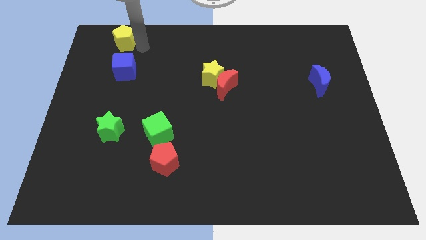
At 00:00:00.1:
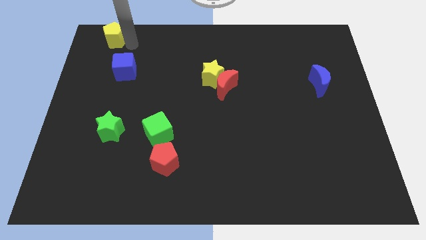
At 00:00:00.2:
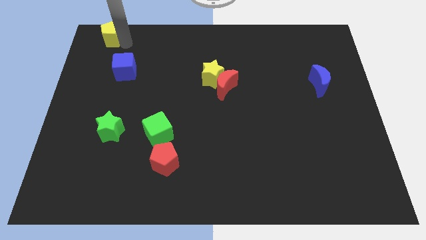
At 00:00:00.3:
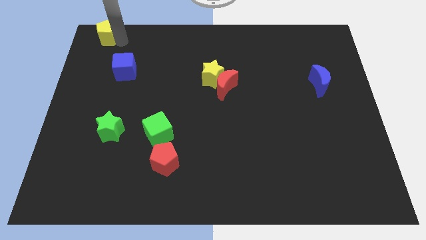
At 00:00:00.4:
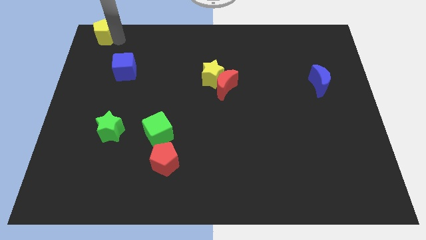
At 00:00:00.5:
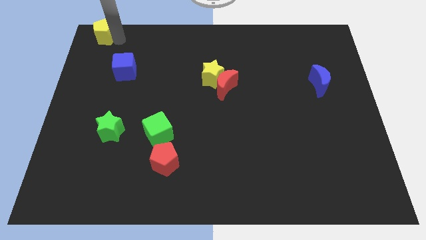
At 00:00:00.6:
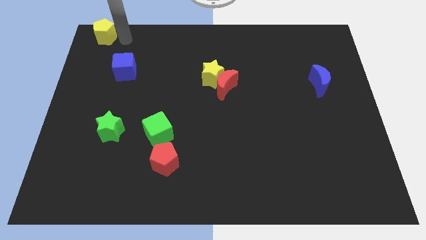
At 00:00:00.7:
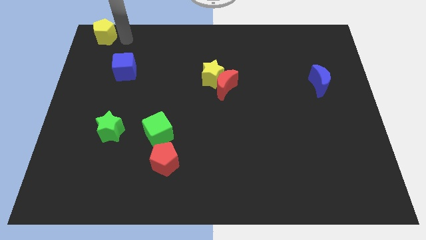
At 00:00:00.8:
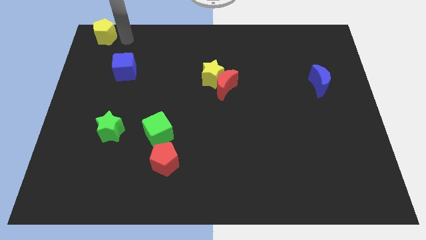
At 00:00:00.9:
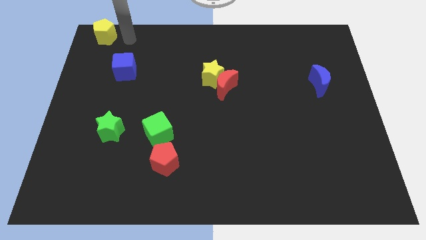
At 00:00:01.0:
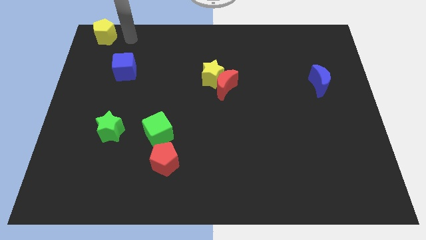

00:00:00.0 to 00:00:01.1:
move the yellow pentagon top left corner of the board

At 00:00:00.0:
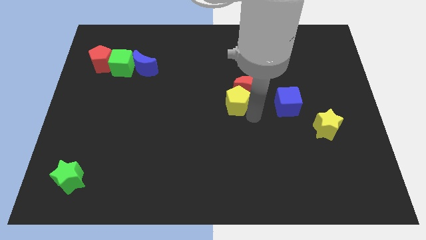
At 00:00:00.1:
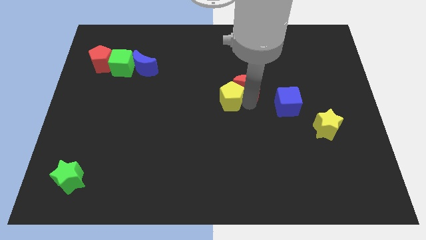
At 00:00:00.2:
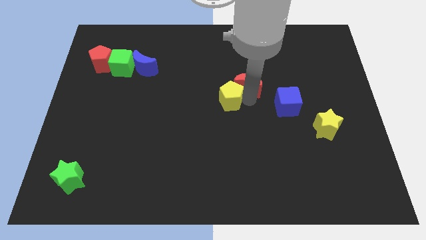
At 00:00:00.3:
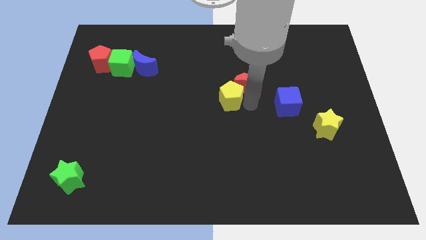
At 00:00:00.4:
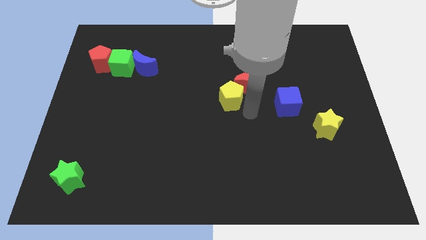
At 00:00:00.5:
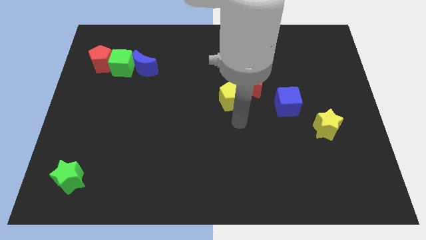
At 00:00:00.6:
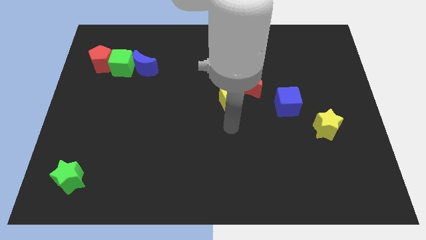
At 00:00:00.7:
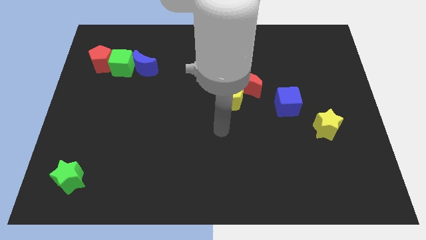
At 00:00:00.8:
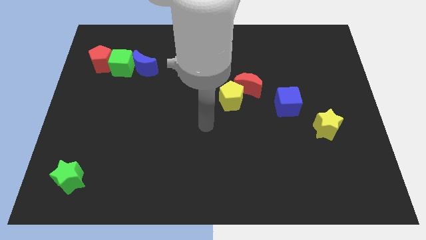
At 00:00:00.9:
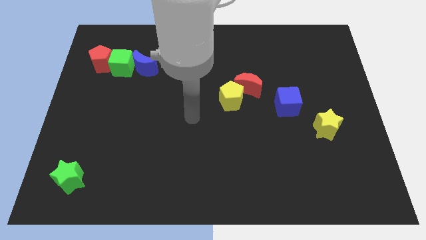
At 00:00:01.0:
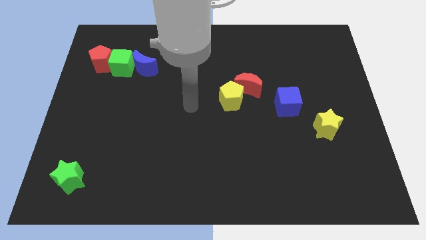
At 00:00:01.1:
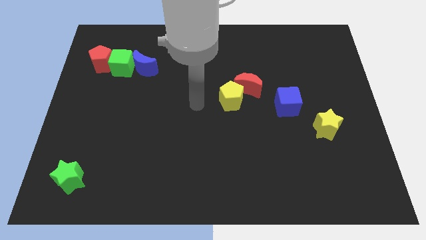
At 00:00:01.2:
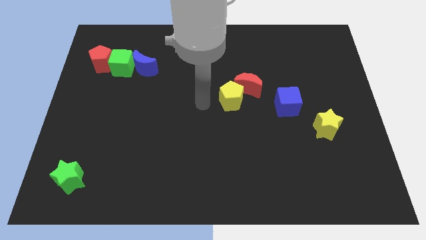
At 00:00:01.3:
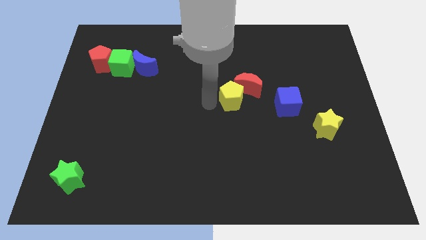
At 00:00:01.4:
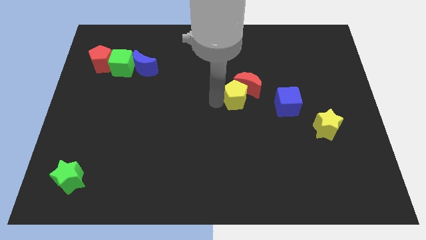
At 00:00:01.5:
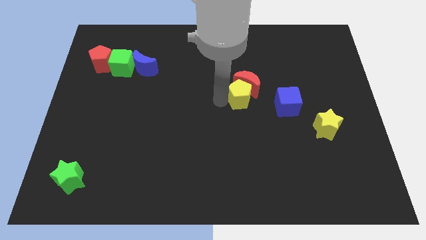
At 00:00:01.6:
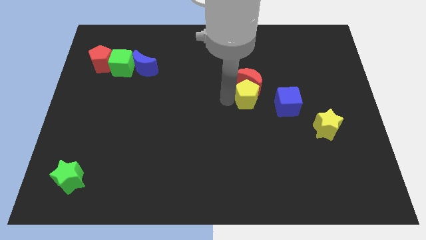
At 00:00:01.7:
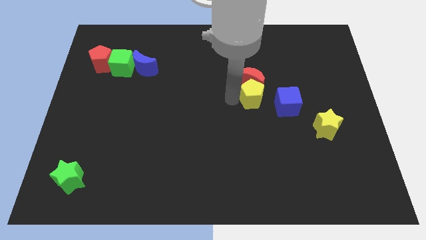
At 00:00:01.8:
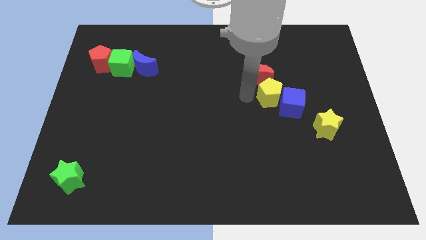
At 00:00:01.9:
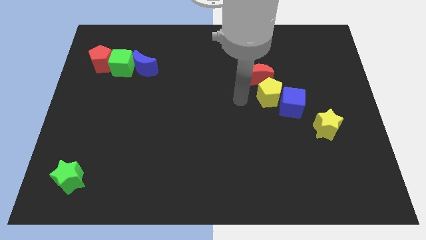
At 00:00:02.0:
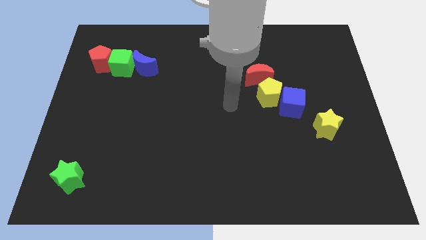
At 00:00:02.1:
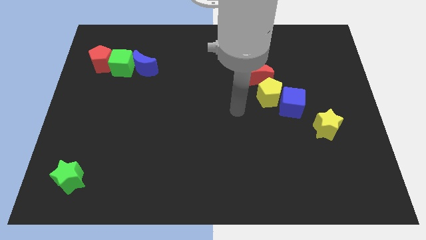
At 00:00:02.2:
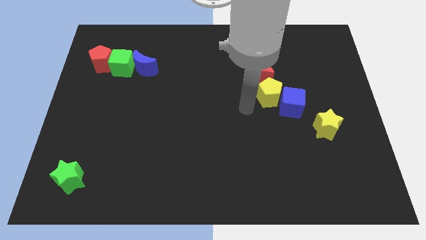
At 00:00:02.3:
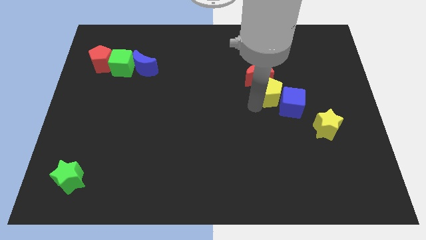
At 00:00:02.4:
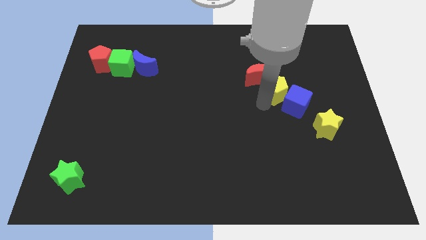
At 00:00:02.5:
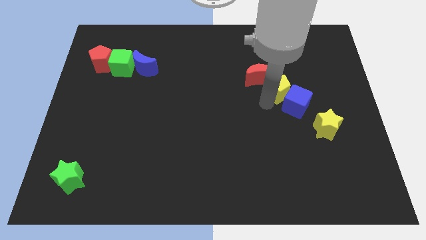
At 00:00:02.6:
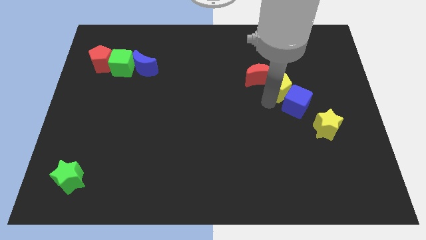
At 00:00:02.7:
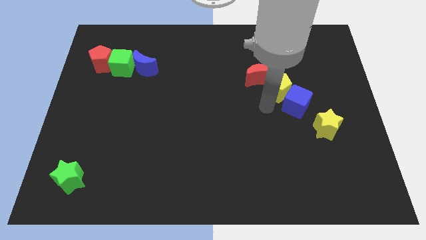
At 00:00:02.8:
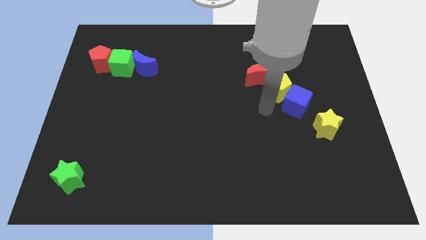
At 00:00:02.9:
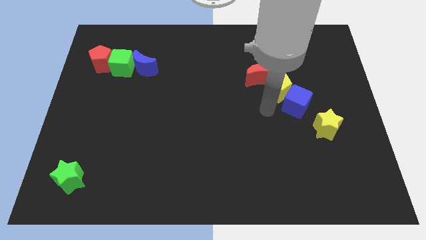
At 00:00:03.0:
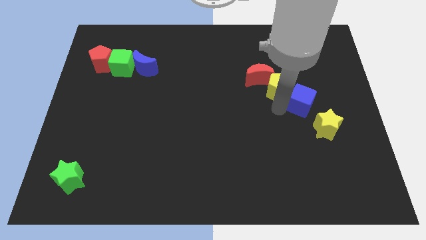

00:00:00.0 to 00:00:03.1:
place the yellow star between the red moon and blue cube

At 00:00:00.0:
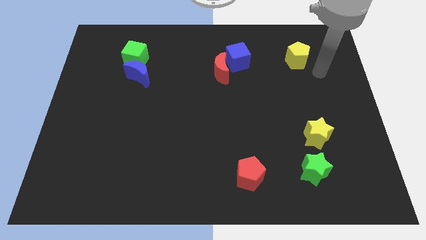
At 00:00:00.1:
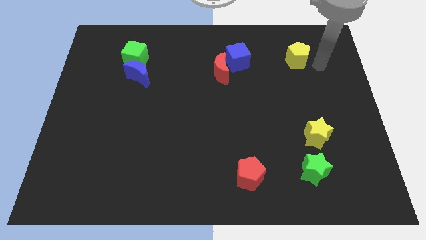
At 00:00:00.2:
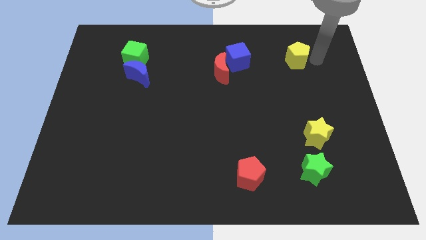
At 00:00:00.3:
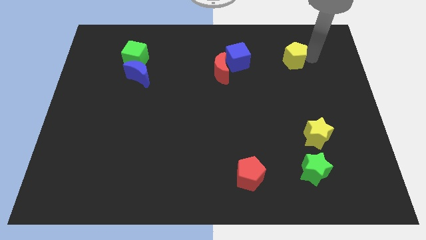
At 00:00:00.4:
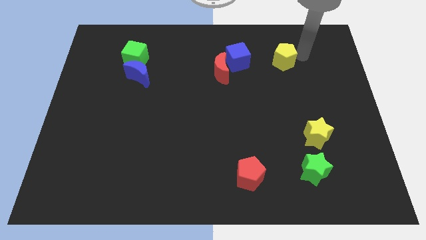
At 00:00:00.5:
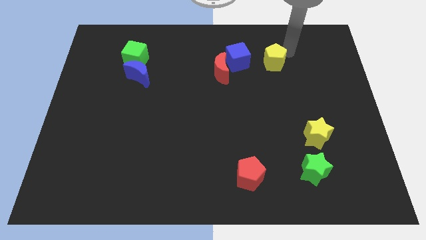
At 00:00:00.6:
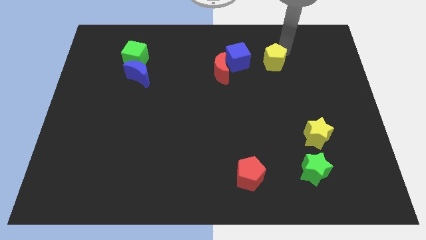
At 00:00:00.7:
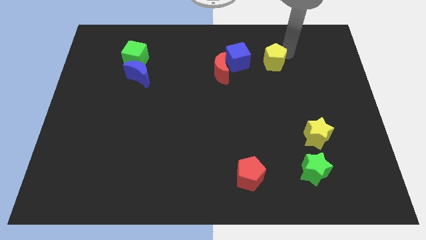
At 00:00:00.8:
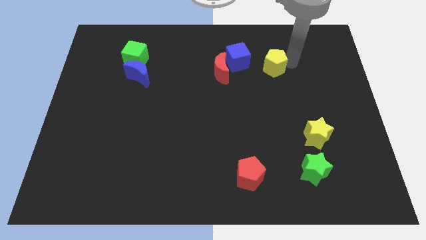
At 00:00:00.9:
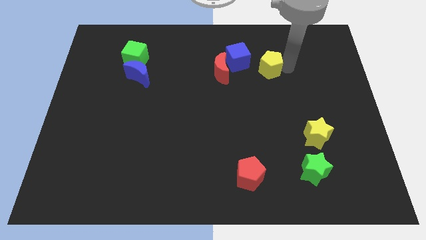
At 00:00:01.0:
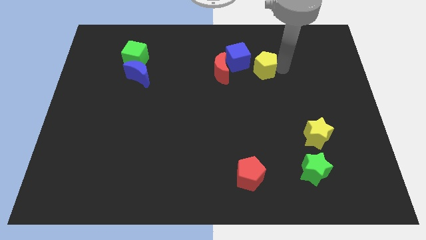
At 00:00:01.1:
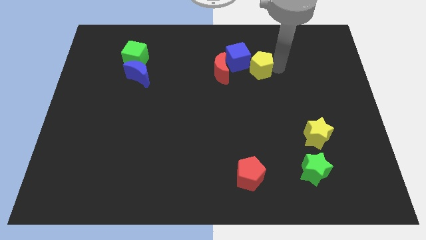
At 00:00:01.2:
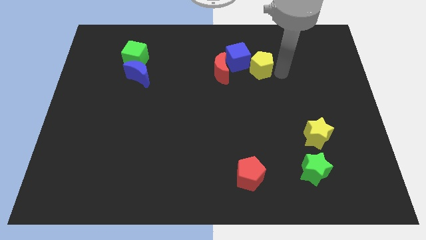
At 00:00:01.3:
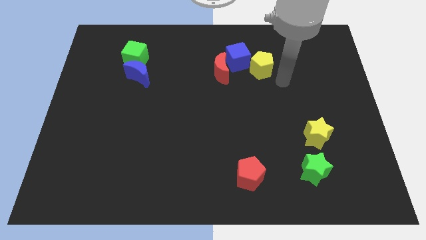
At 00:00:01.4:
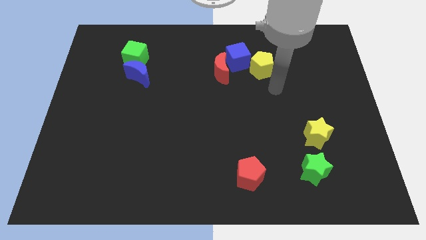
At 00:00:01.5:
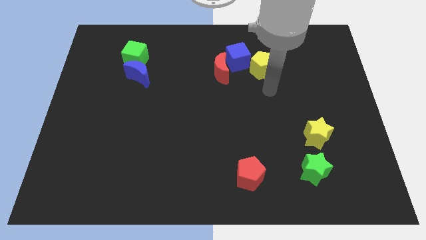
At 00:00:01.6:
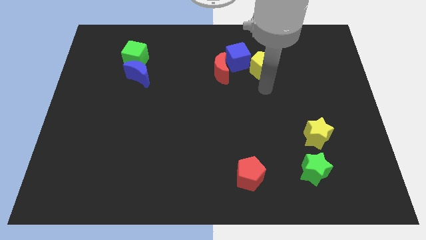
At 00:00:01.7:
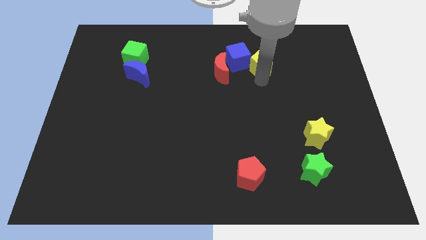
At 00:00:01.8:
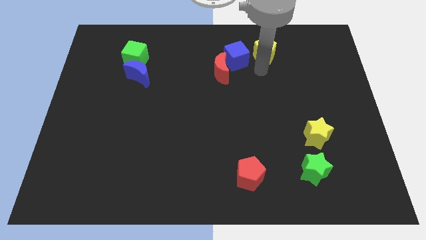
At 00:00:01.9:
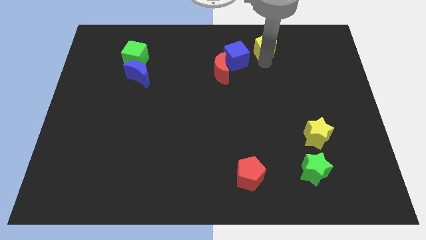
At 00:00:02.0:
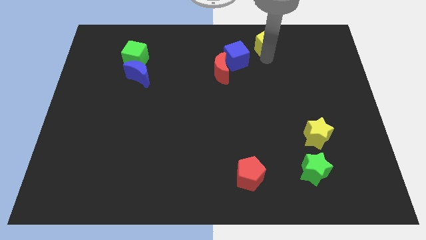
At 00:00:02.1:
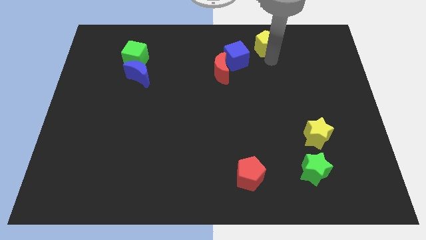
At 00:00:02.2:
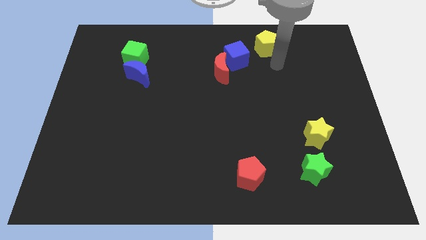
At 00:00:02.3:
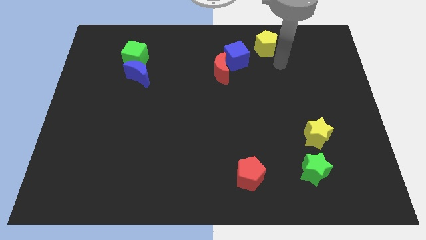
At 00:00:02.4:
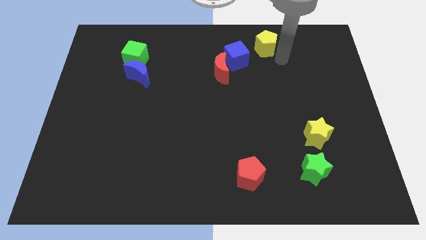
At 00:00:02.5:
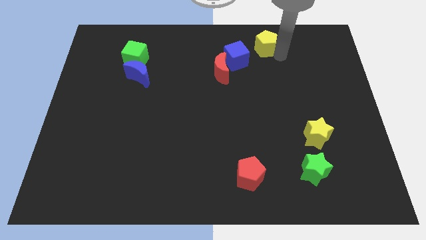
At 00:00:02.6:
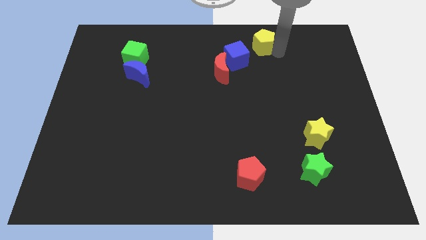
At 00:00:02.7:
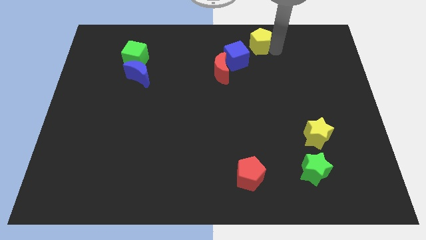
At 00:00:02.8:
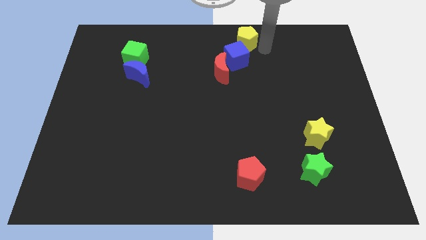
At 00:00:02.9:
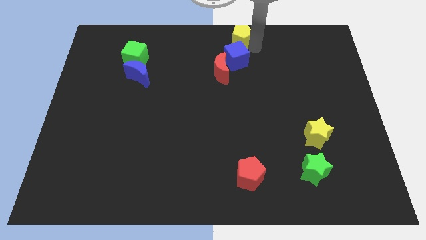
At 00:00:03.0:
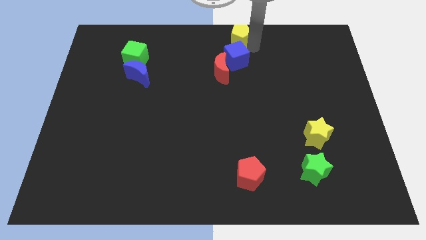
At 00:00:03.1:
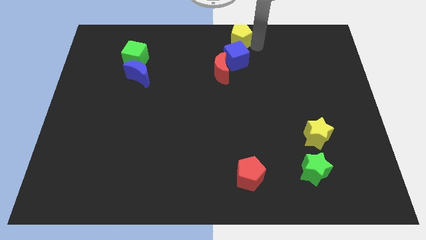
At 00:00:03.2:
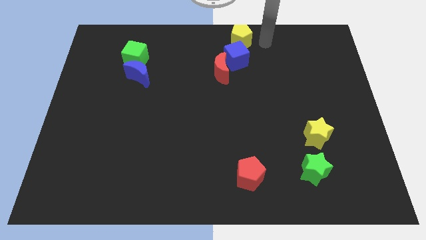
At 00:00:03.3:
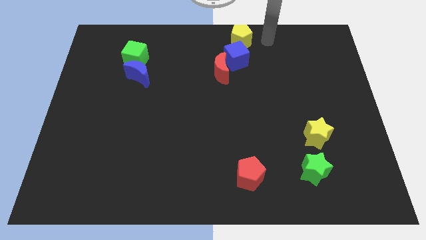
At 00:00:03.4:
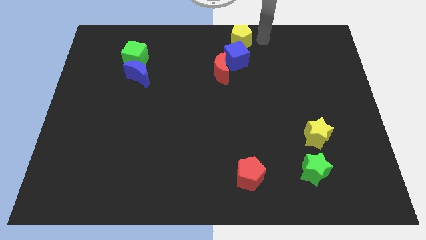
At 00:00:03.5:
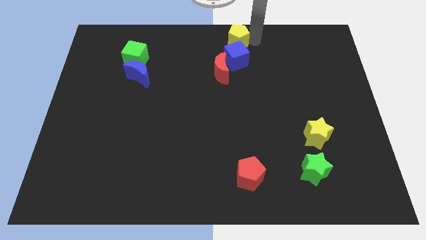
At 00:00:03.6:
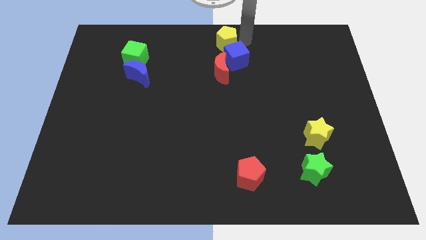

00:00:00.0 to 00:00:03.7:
move the yellow pentagon at the top side of the blue cube

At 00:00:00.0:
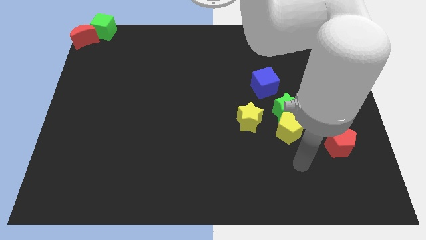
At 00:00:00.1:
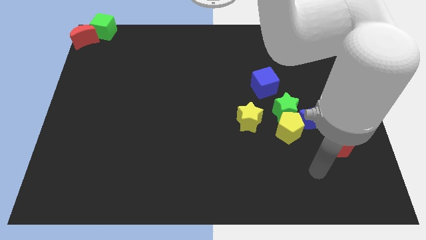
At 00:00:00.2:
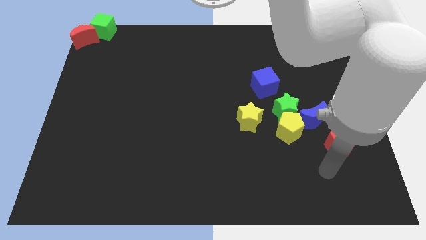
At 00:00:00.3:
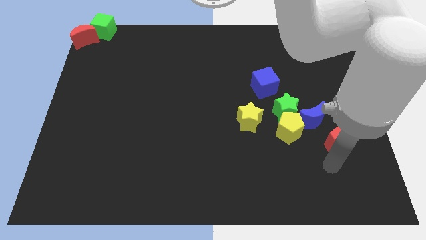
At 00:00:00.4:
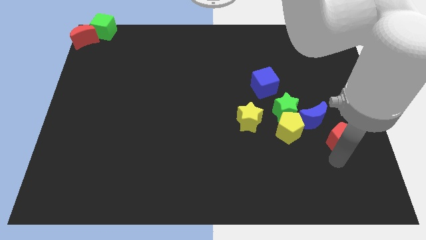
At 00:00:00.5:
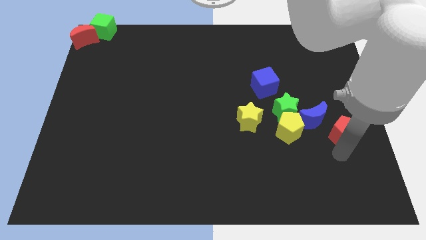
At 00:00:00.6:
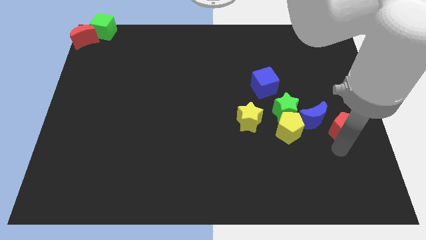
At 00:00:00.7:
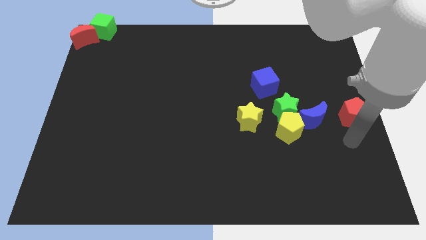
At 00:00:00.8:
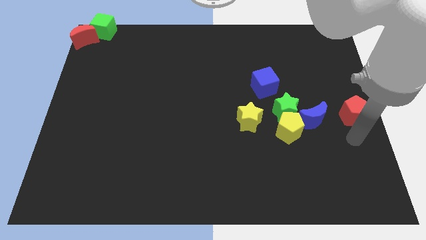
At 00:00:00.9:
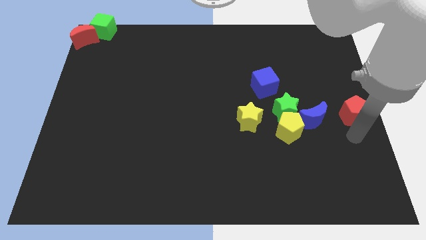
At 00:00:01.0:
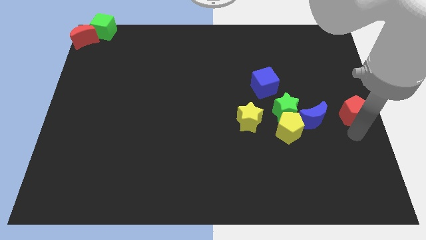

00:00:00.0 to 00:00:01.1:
place red pentagon parallel right to blue moon

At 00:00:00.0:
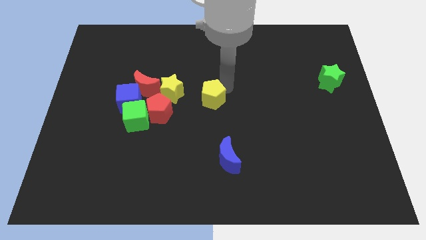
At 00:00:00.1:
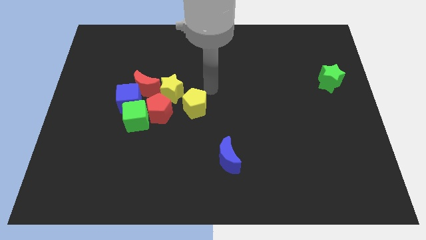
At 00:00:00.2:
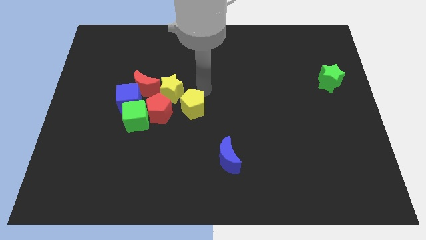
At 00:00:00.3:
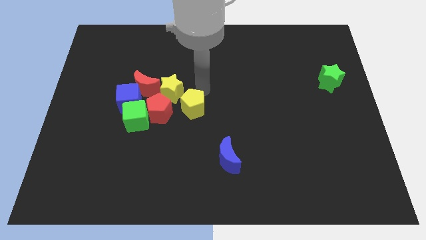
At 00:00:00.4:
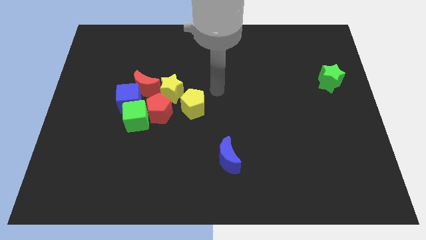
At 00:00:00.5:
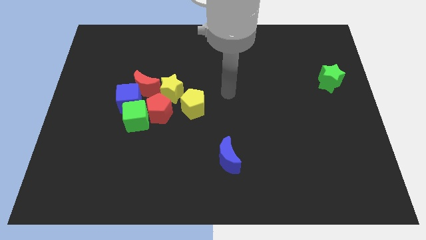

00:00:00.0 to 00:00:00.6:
move the yellow pentagon right to the red pentagon
